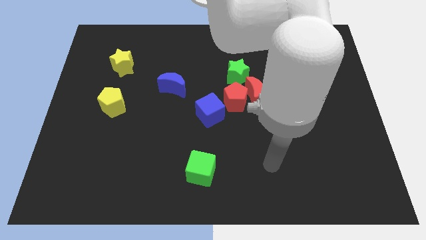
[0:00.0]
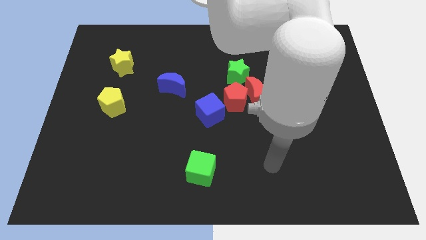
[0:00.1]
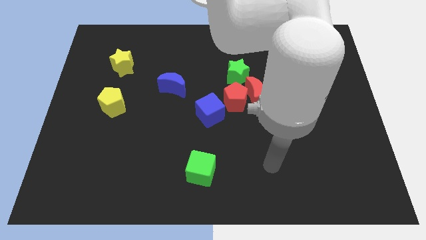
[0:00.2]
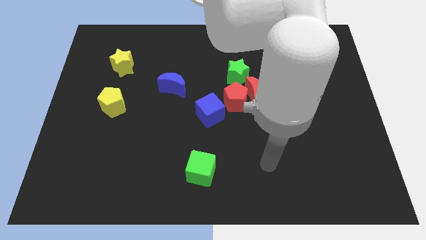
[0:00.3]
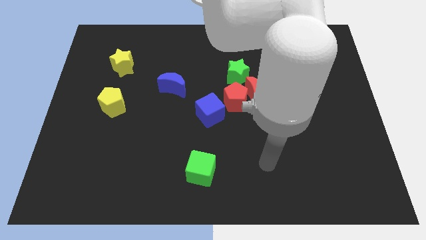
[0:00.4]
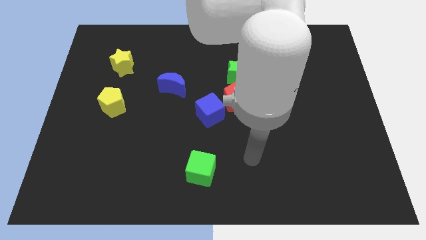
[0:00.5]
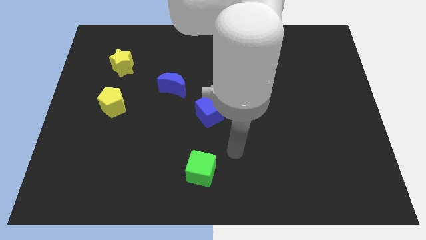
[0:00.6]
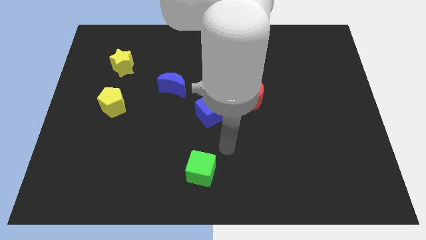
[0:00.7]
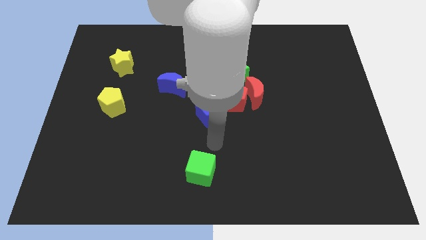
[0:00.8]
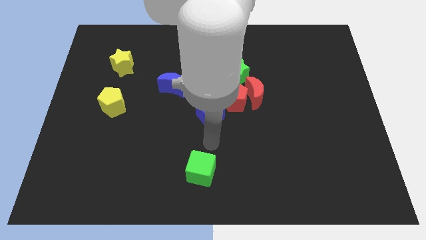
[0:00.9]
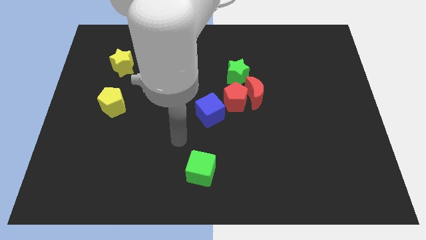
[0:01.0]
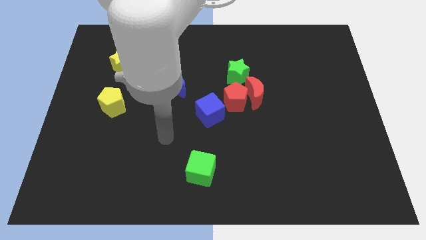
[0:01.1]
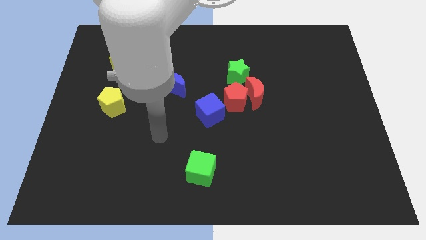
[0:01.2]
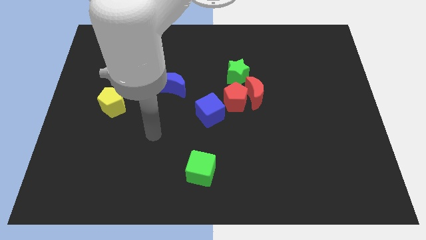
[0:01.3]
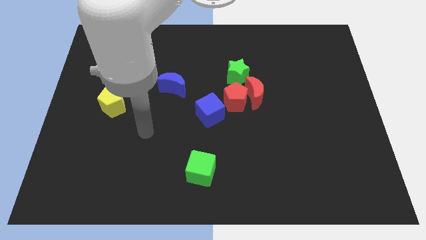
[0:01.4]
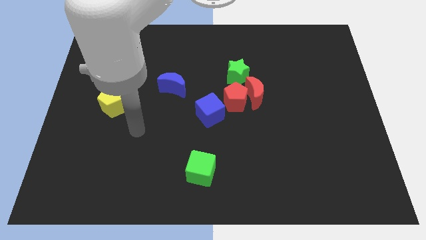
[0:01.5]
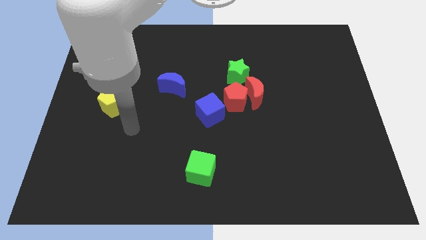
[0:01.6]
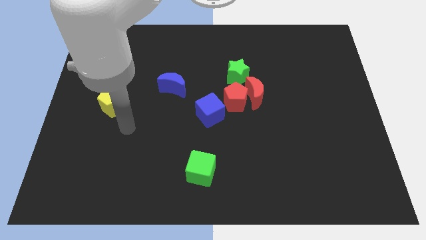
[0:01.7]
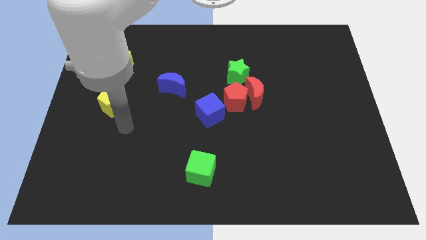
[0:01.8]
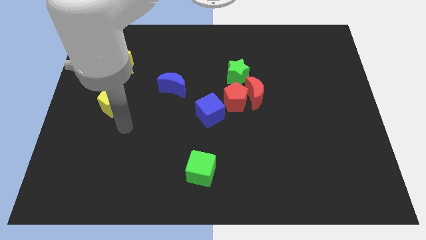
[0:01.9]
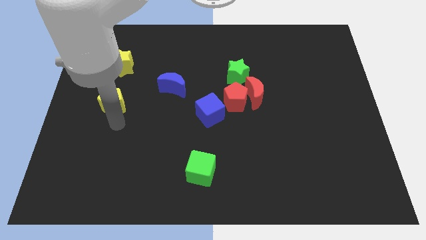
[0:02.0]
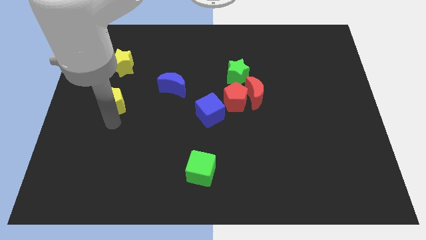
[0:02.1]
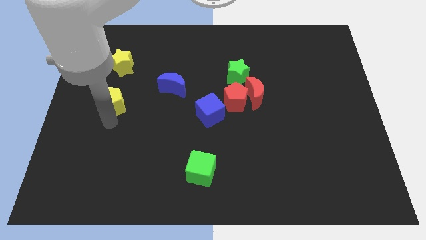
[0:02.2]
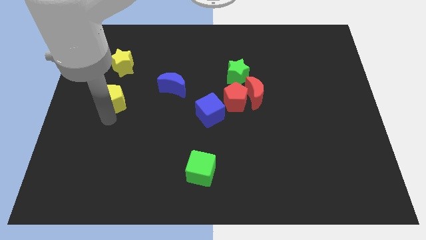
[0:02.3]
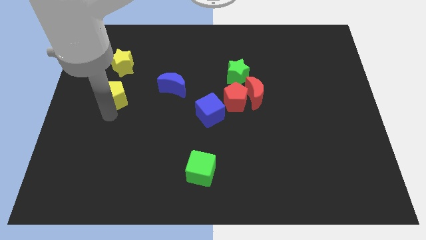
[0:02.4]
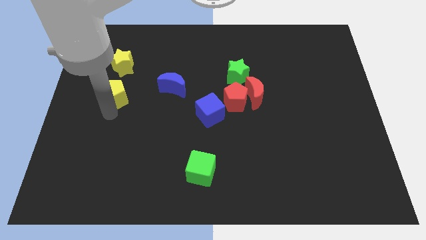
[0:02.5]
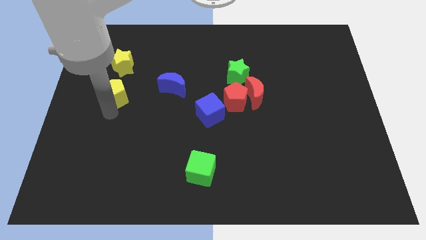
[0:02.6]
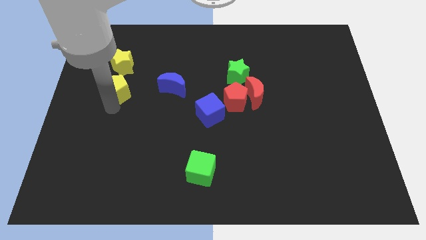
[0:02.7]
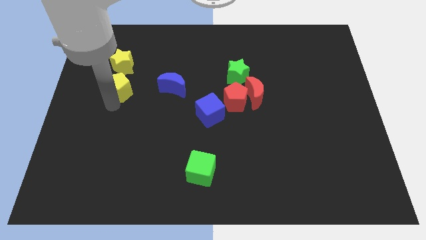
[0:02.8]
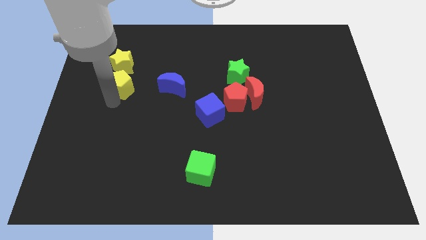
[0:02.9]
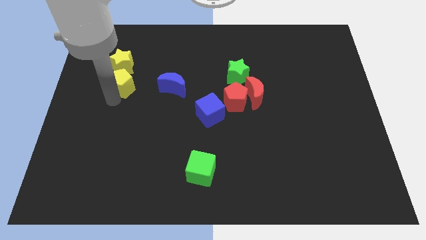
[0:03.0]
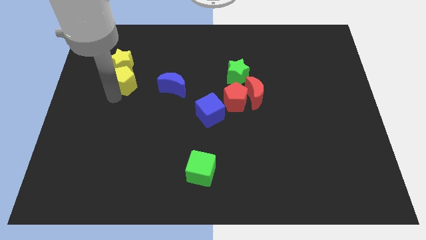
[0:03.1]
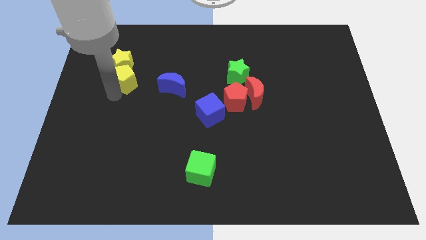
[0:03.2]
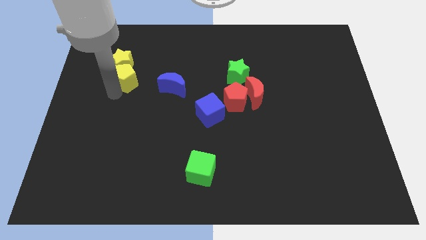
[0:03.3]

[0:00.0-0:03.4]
move the yellow pentagon towards the yellow star

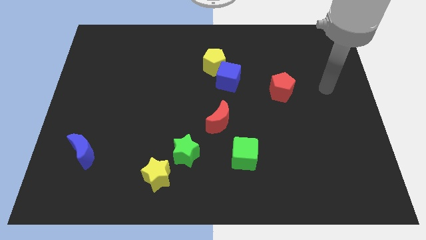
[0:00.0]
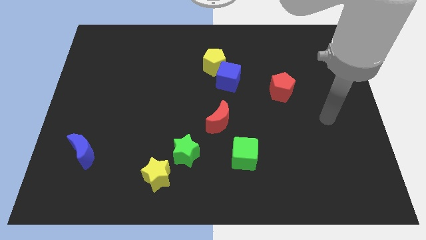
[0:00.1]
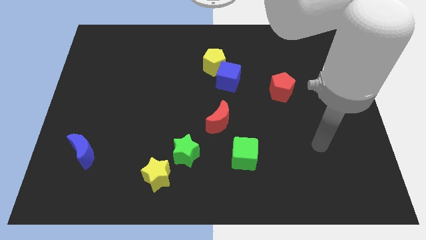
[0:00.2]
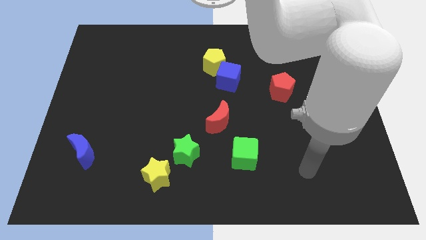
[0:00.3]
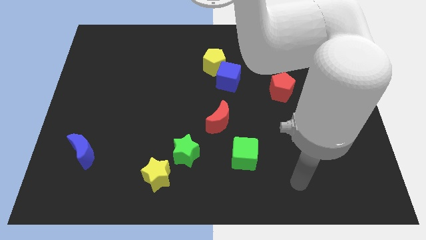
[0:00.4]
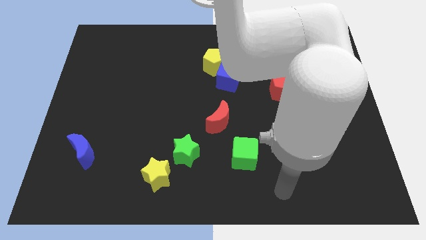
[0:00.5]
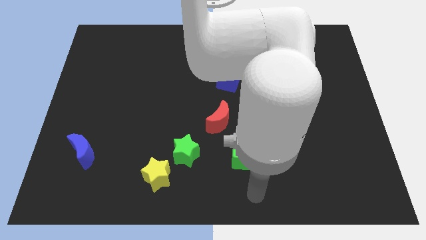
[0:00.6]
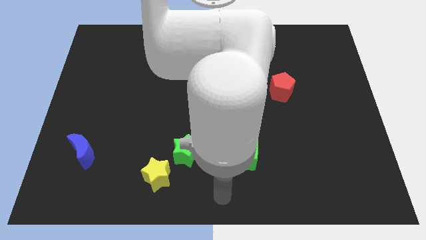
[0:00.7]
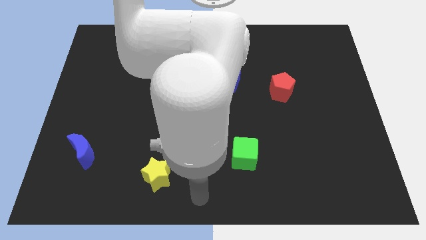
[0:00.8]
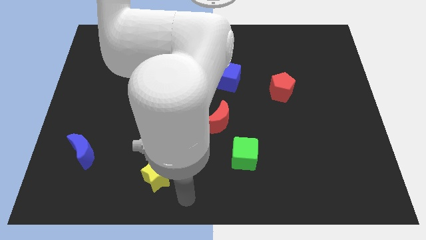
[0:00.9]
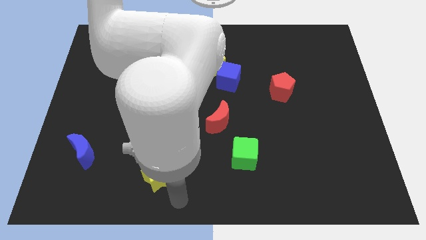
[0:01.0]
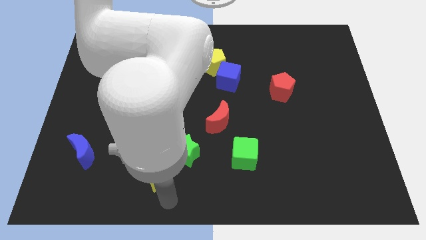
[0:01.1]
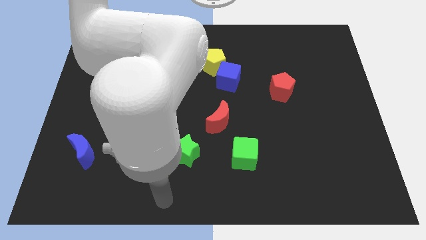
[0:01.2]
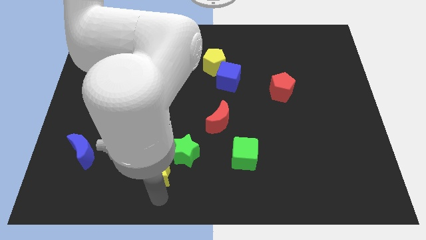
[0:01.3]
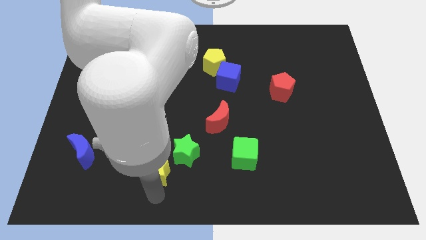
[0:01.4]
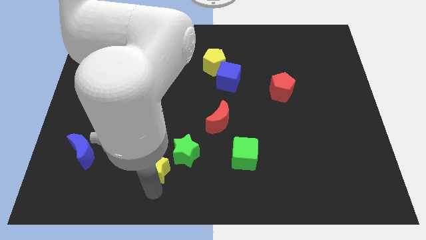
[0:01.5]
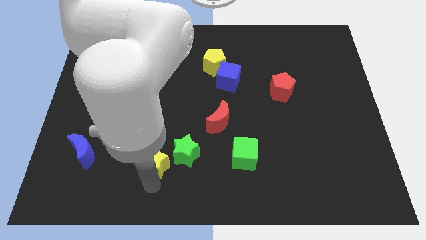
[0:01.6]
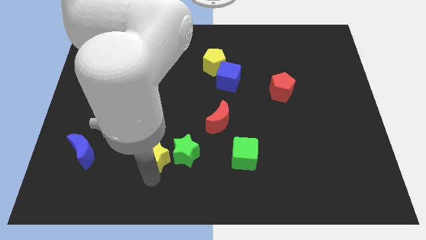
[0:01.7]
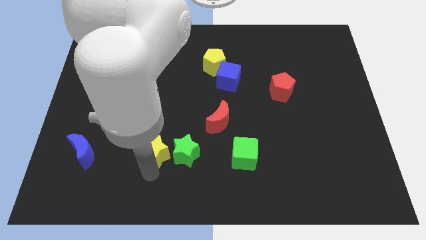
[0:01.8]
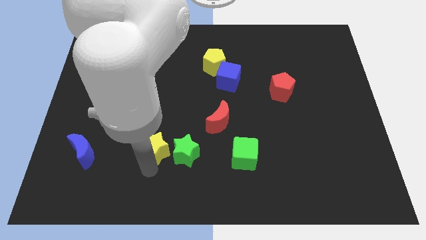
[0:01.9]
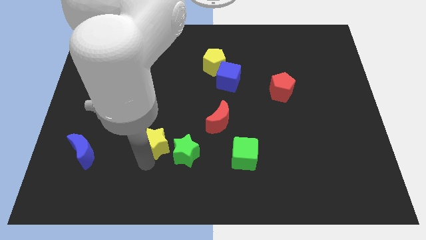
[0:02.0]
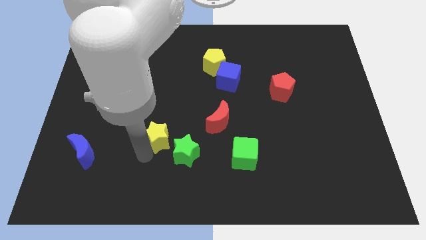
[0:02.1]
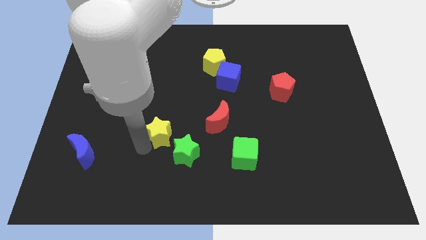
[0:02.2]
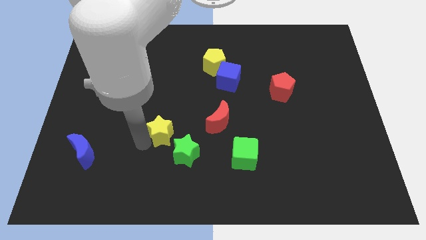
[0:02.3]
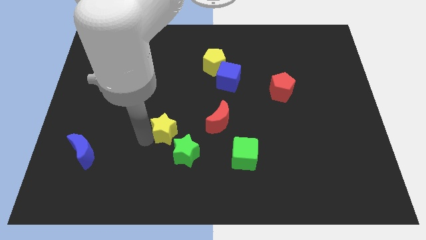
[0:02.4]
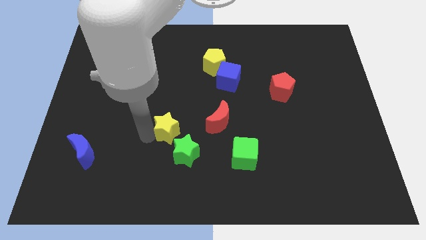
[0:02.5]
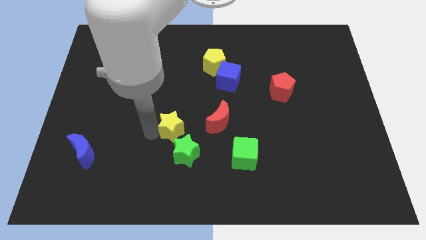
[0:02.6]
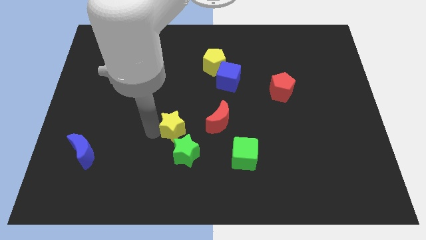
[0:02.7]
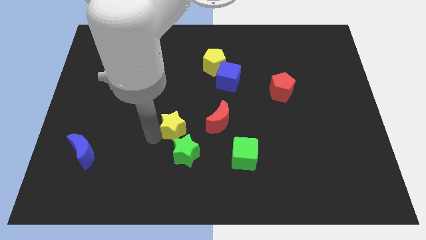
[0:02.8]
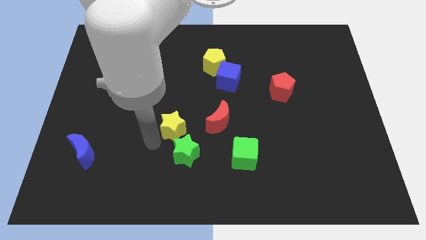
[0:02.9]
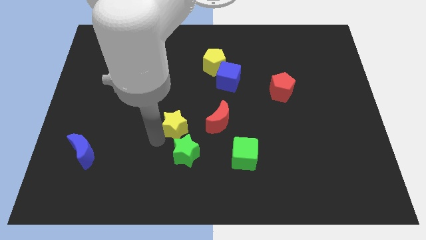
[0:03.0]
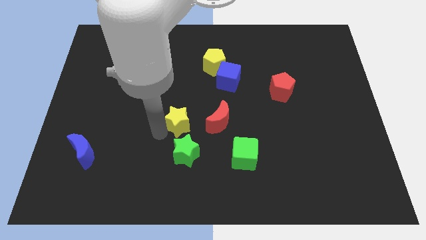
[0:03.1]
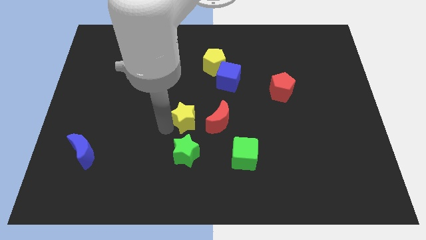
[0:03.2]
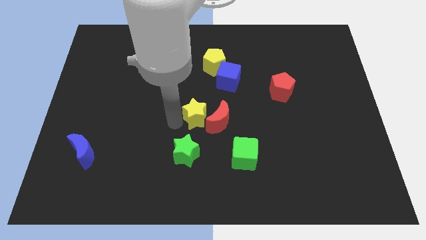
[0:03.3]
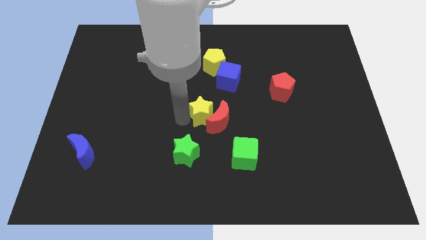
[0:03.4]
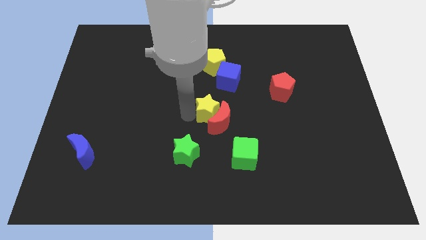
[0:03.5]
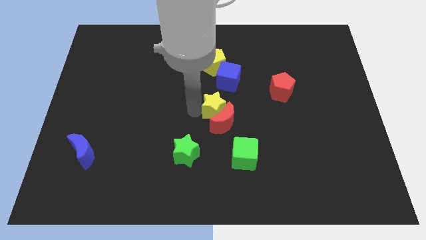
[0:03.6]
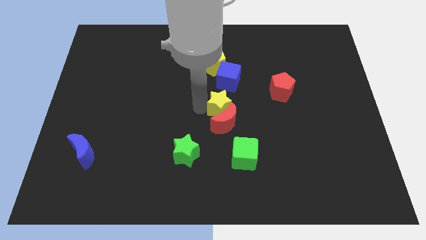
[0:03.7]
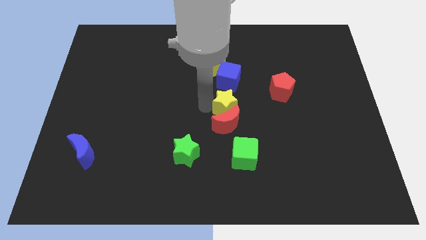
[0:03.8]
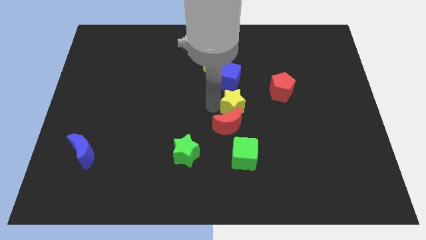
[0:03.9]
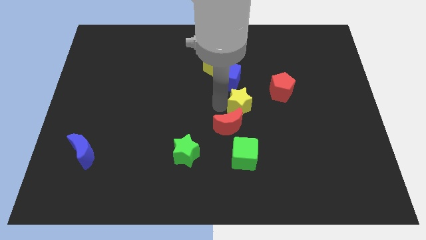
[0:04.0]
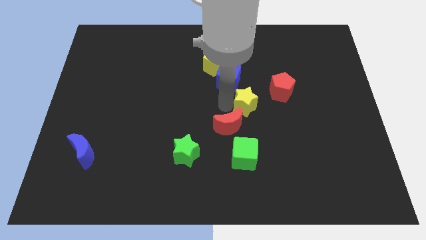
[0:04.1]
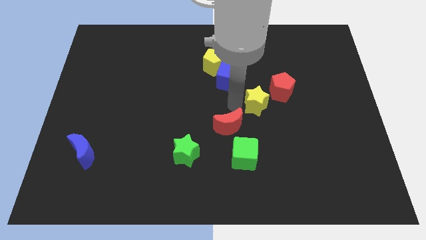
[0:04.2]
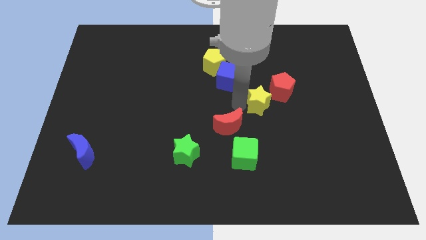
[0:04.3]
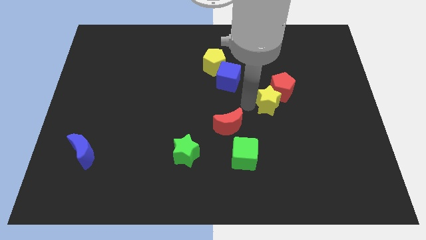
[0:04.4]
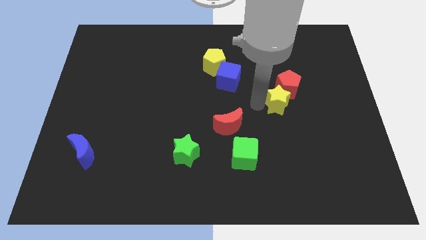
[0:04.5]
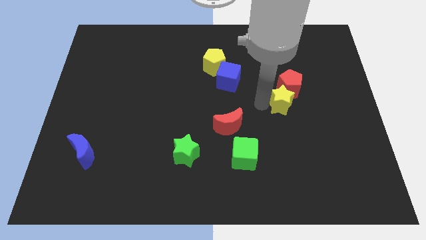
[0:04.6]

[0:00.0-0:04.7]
slide the yellow star close to the red pentagon

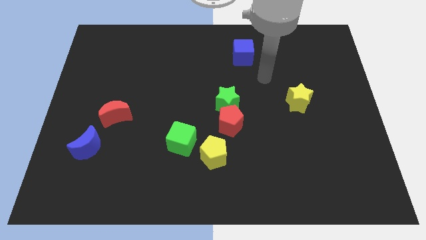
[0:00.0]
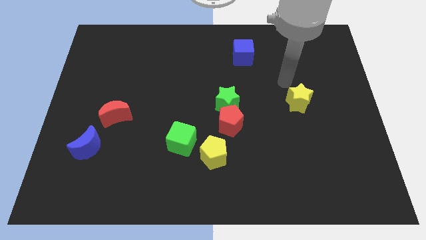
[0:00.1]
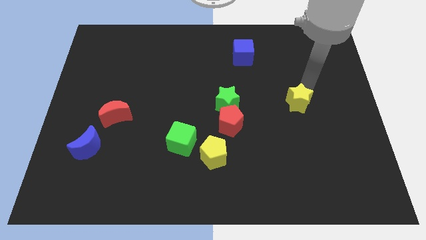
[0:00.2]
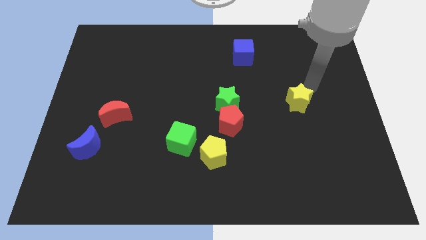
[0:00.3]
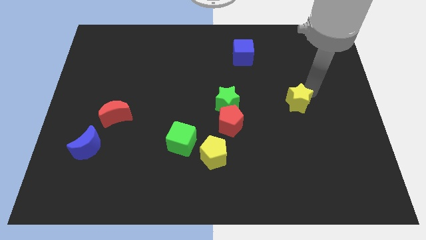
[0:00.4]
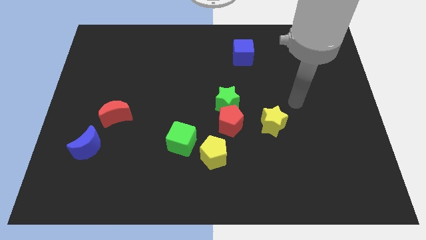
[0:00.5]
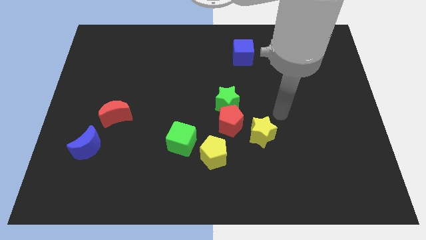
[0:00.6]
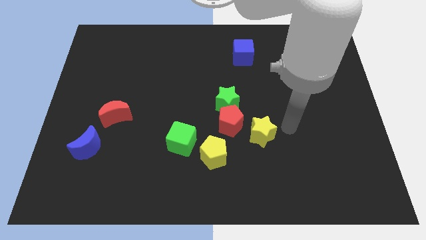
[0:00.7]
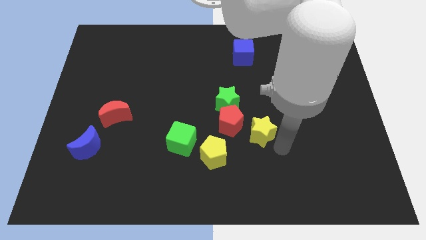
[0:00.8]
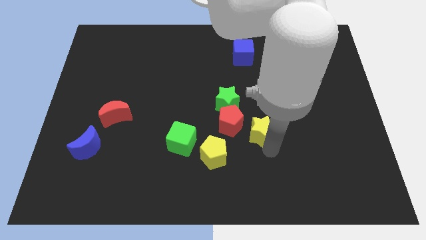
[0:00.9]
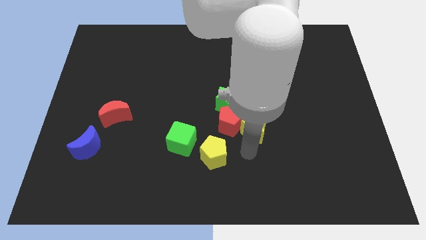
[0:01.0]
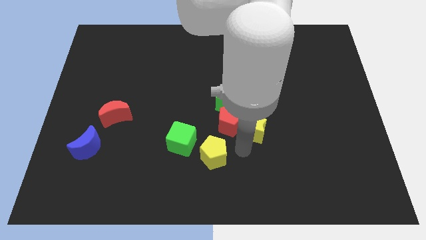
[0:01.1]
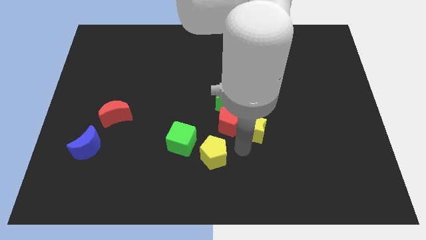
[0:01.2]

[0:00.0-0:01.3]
move the yellow star close to the red pentagon
